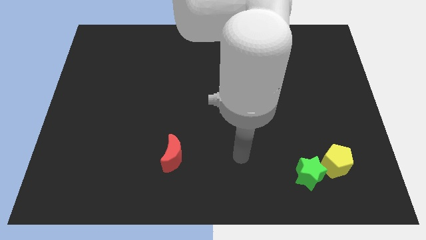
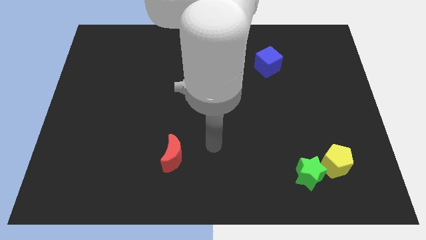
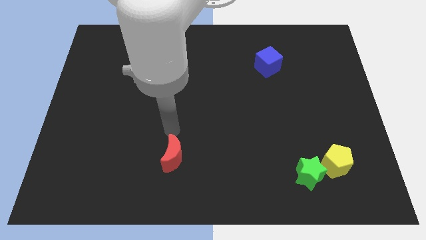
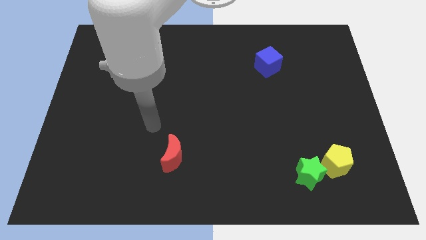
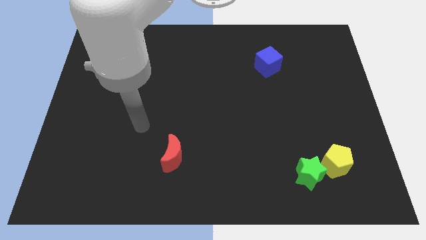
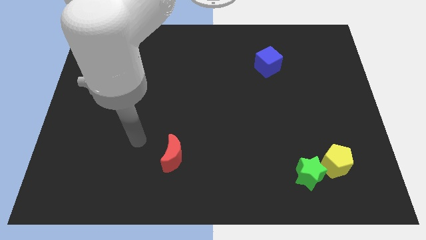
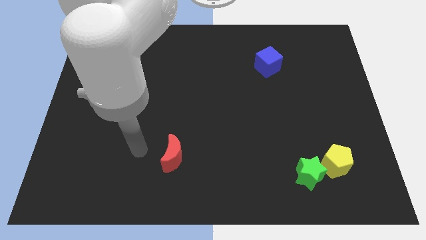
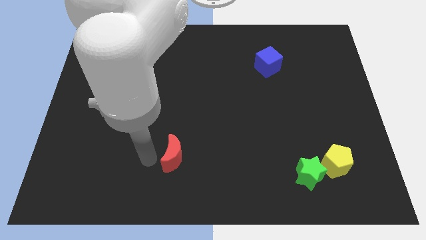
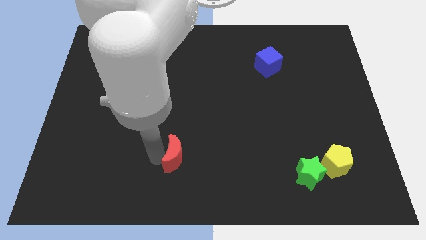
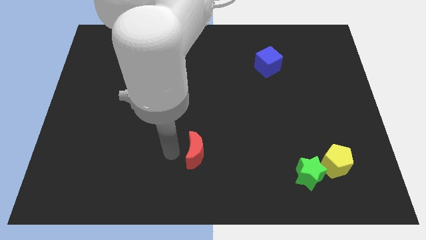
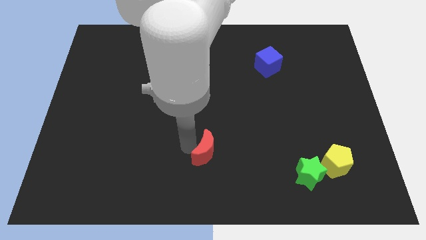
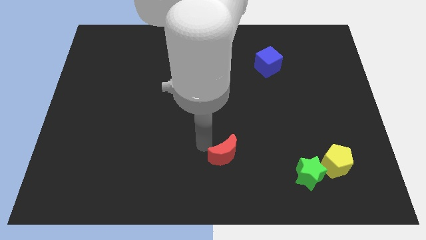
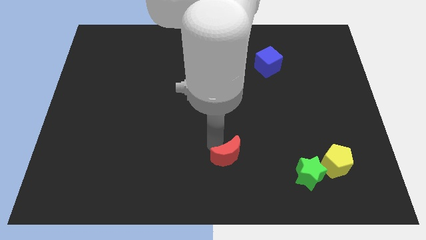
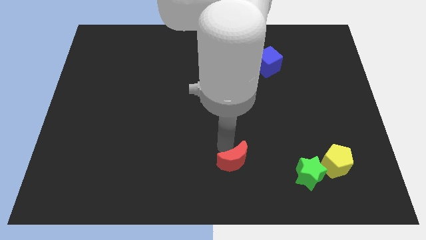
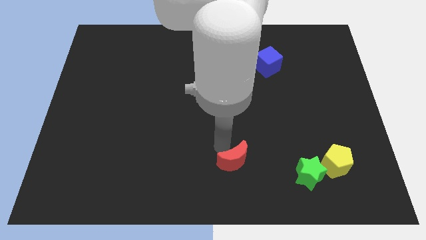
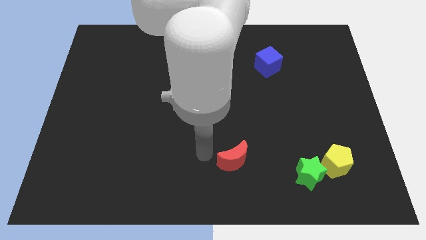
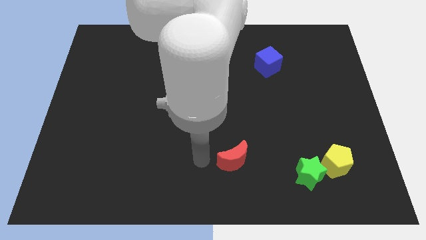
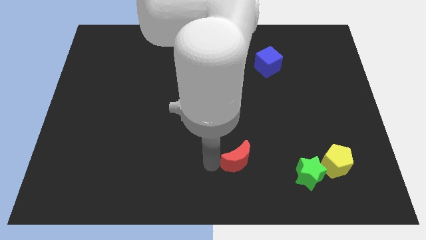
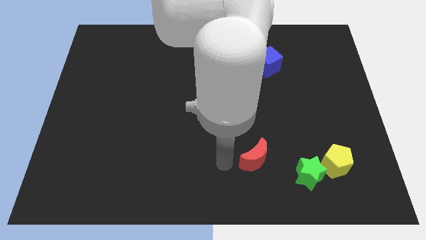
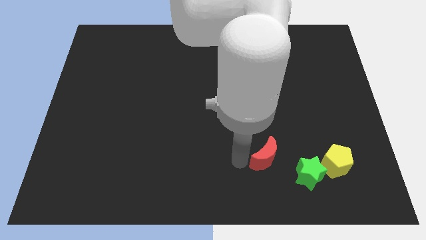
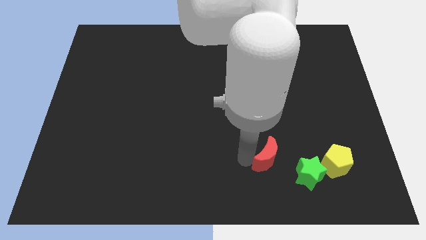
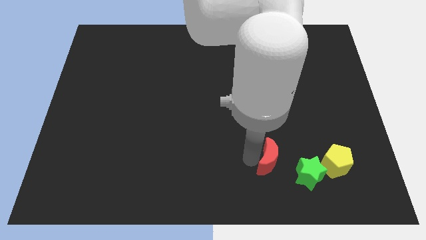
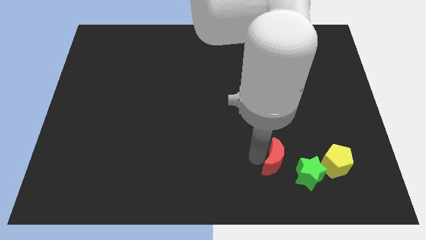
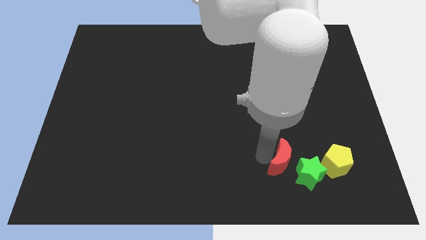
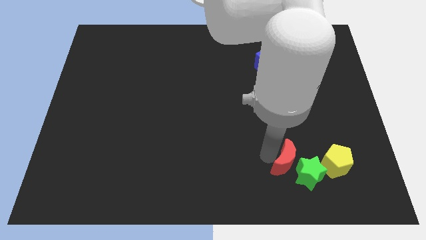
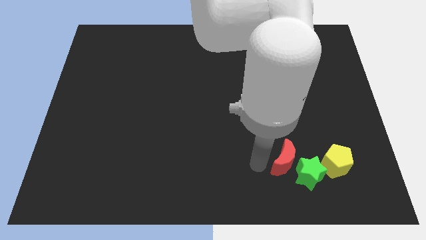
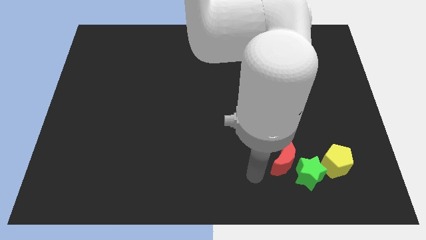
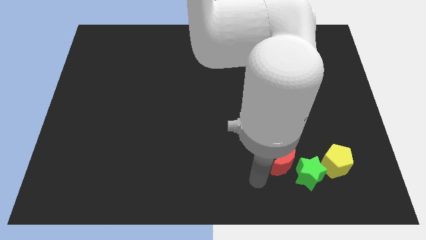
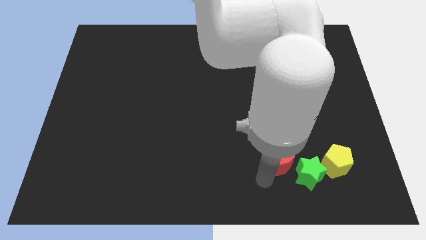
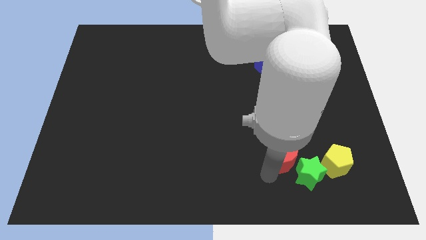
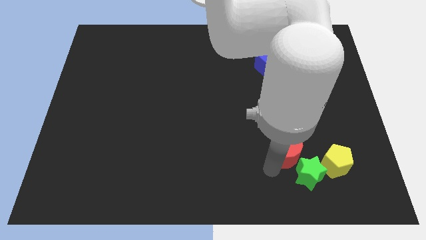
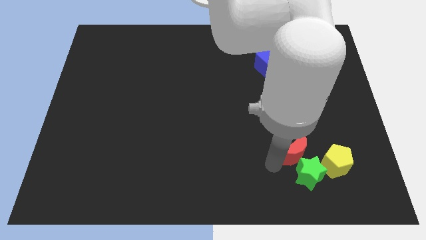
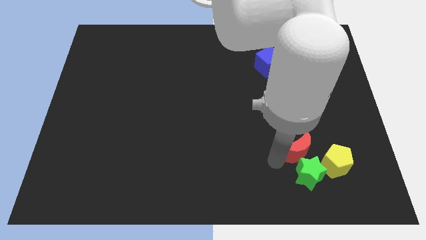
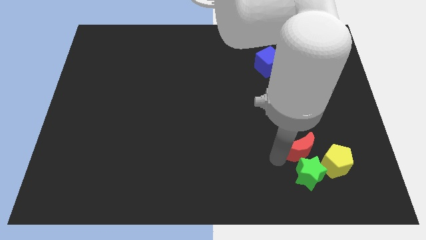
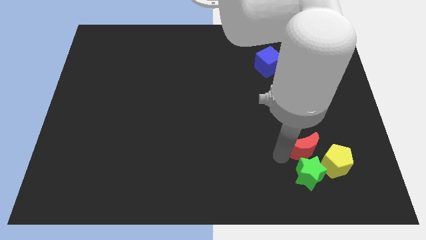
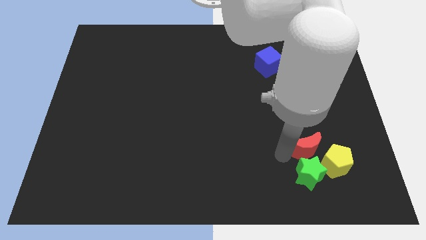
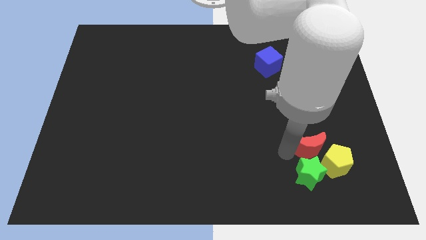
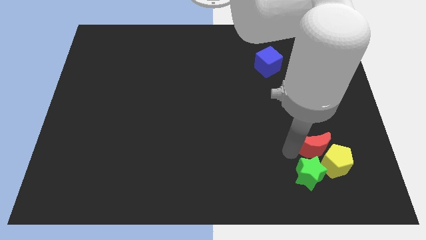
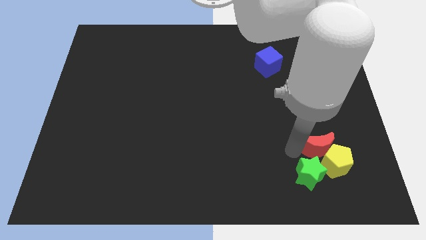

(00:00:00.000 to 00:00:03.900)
put the moon close to the yellow pentagon

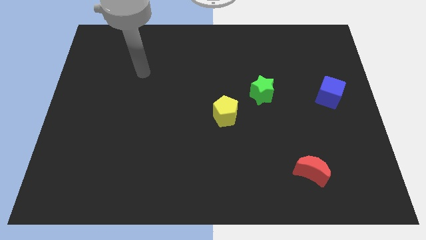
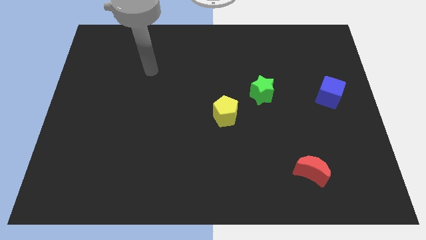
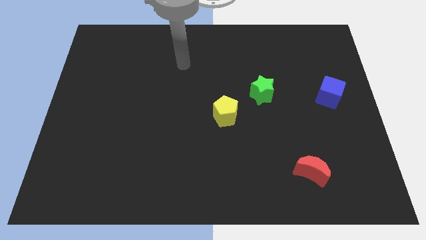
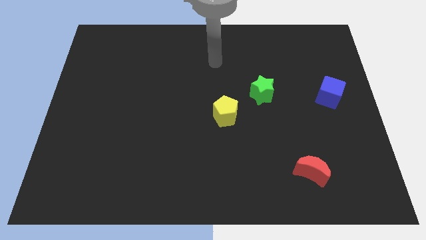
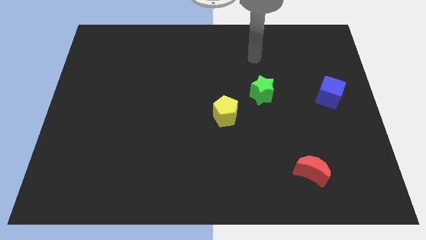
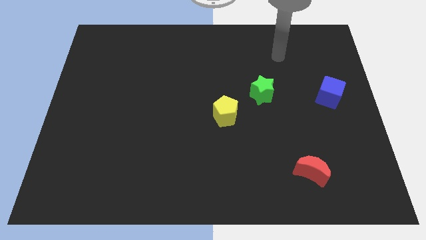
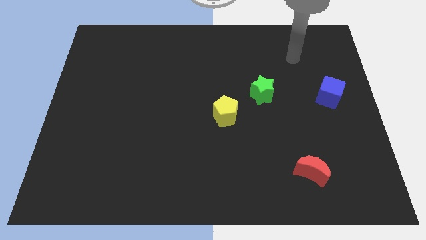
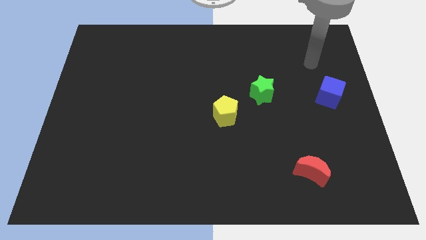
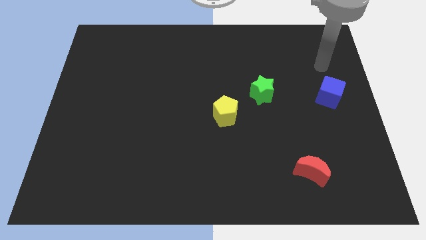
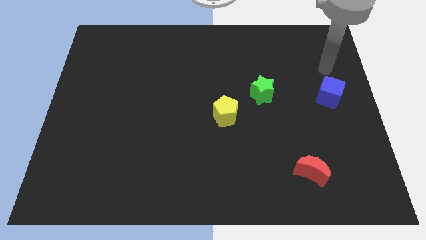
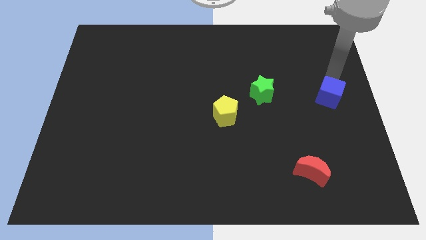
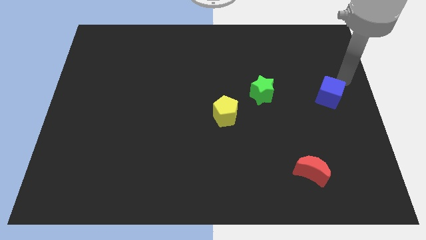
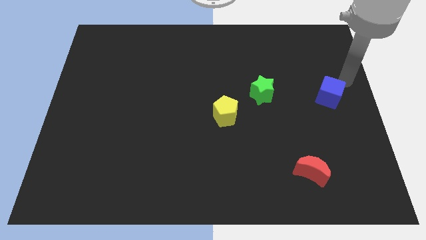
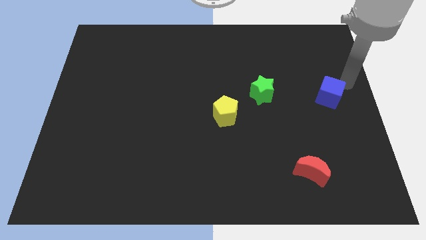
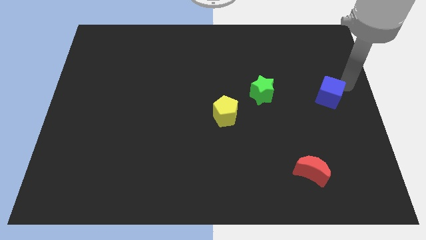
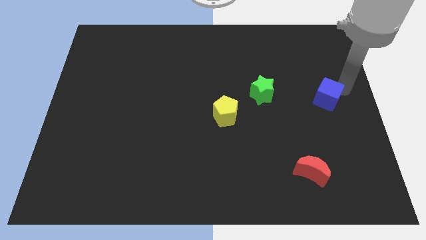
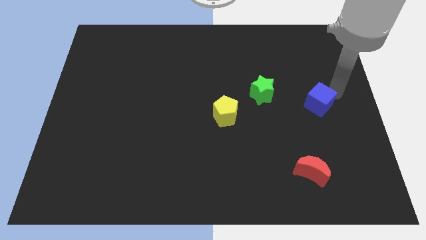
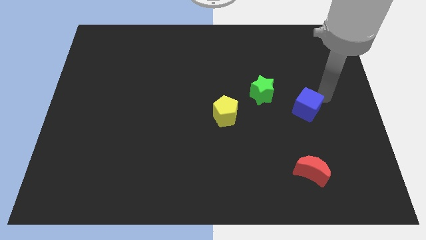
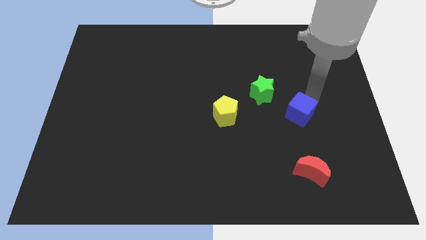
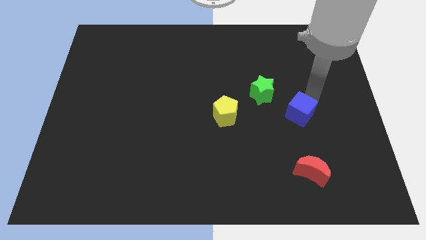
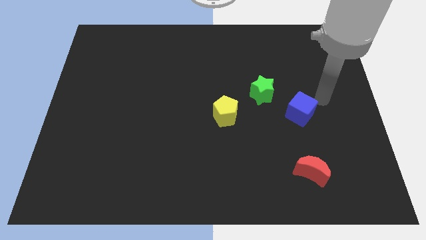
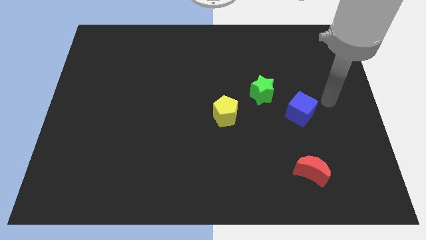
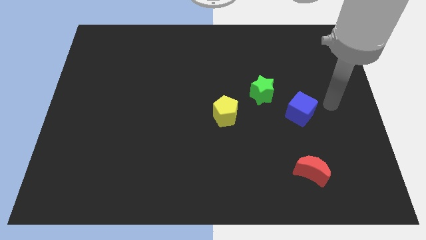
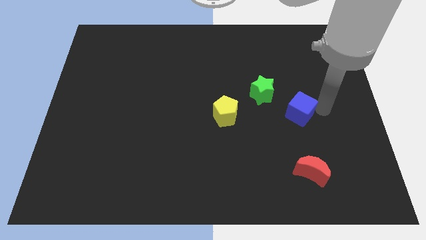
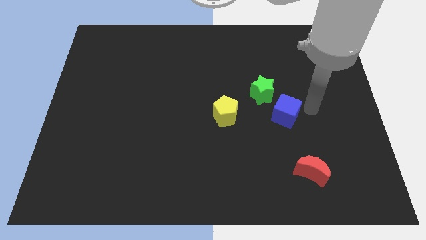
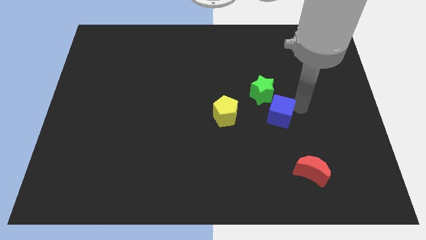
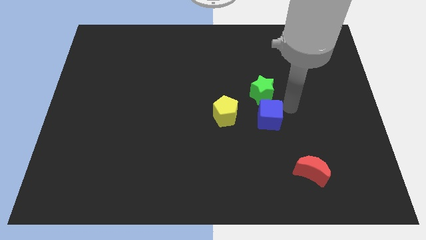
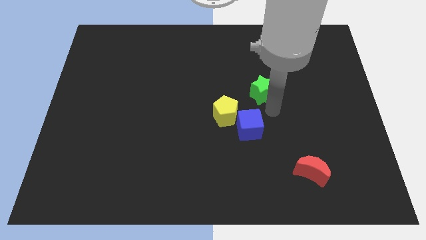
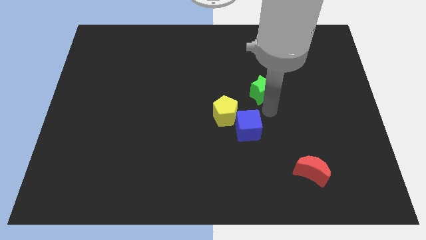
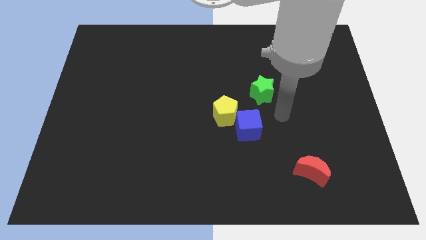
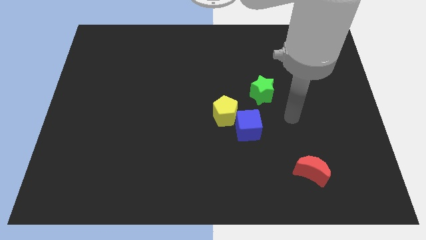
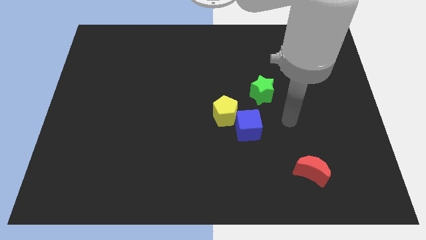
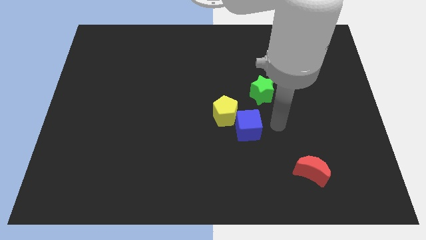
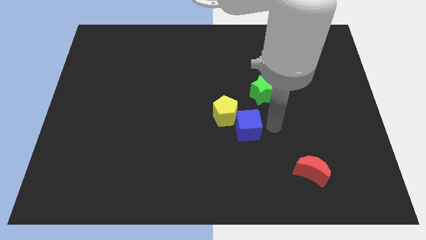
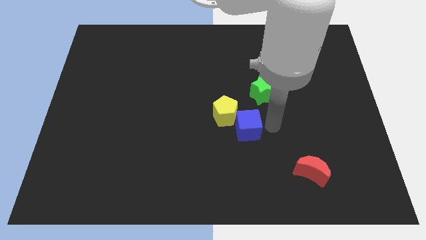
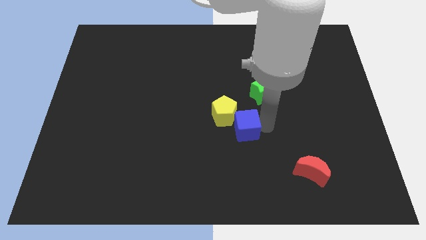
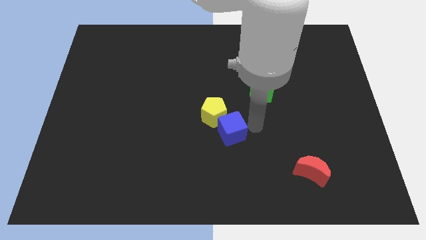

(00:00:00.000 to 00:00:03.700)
push the blue cube towards the pentagon

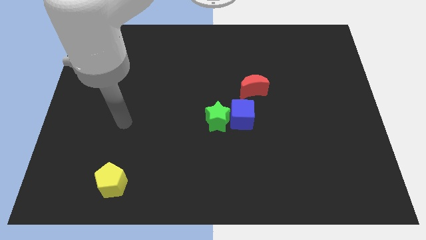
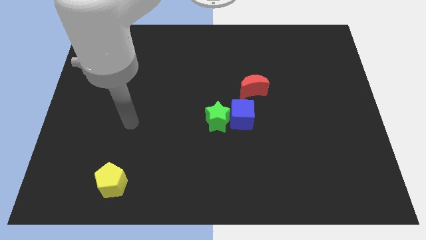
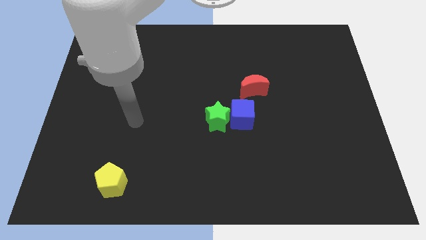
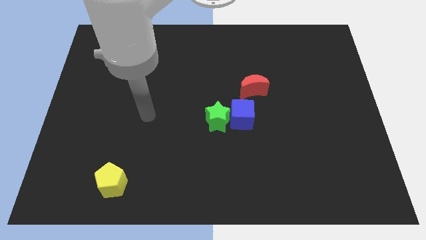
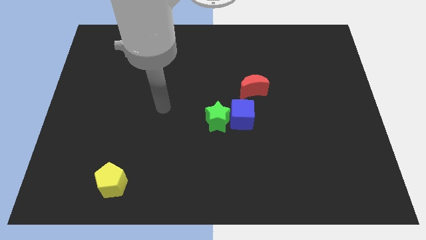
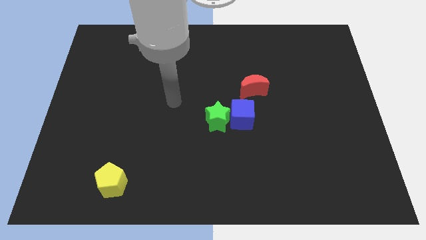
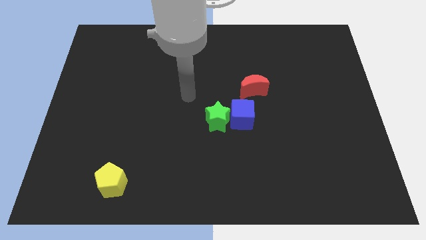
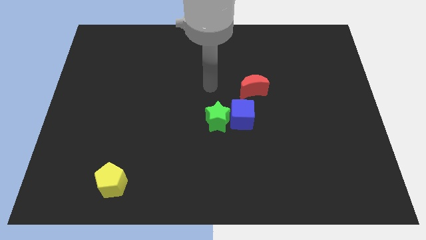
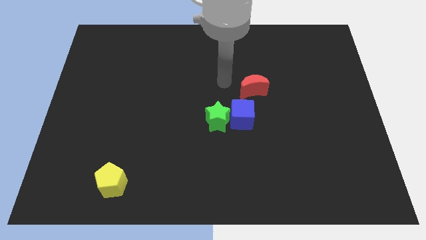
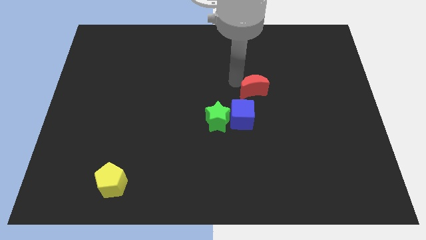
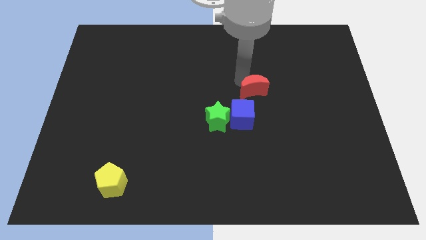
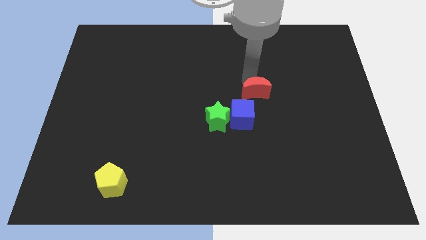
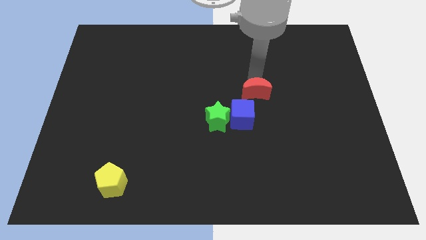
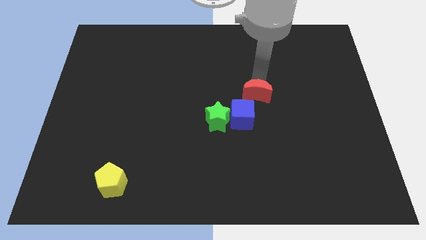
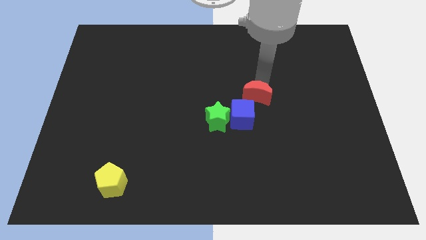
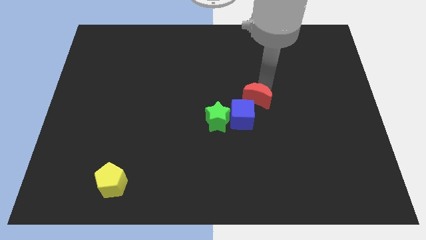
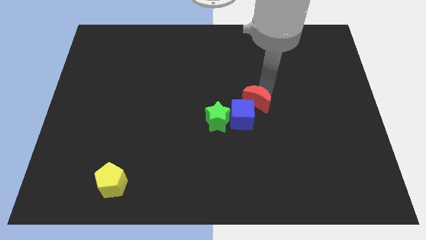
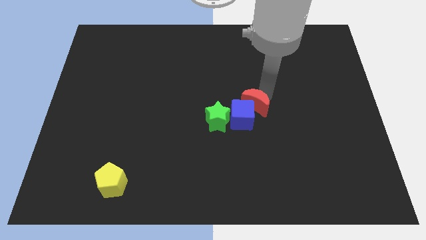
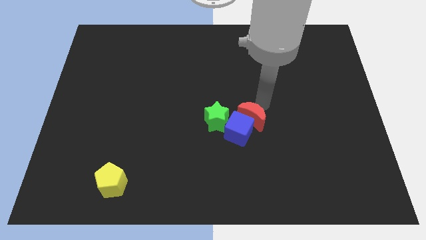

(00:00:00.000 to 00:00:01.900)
move the red block to the blue cube
